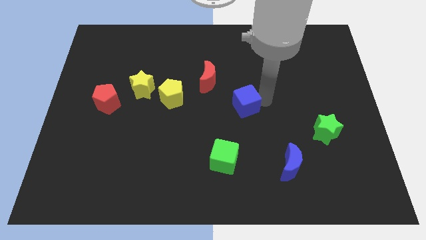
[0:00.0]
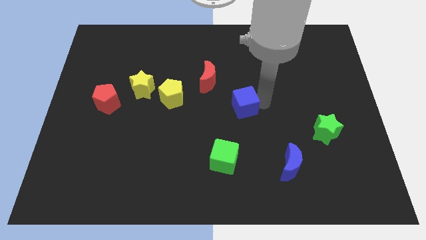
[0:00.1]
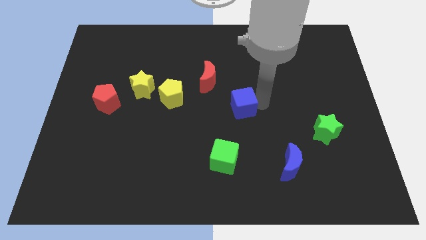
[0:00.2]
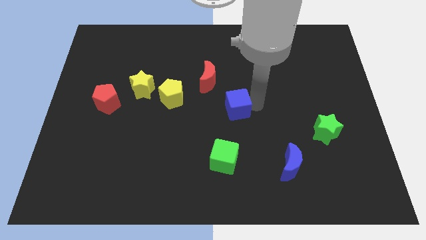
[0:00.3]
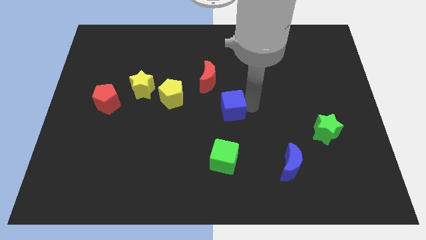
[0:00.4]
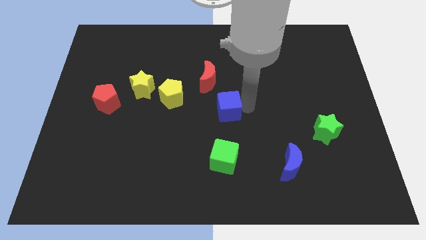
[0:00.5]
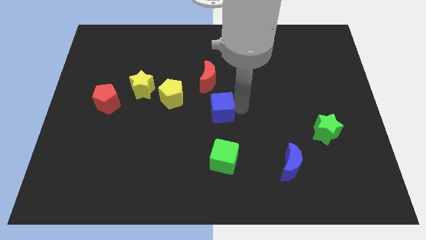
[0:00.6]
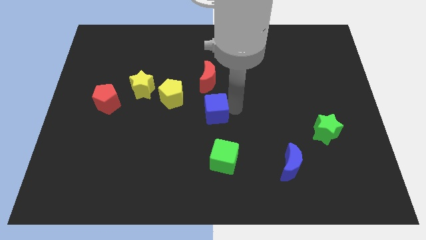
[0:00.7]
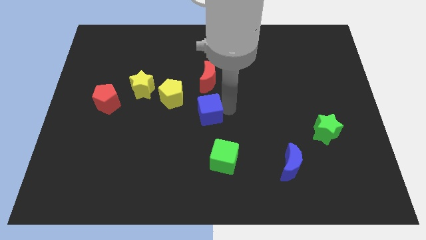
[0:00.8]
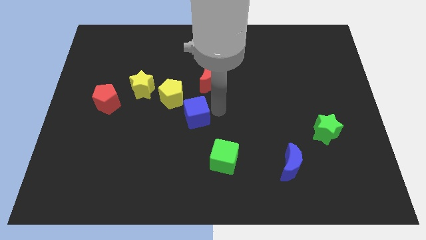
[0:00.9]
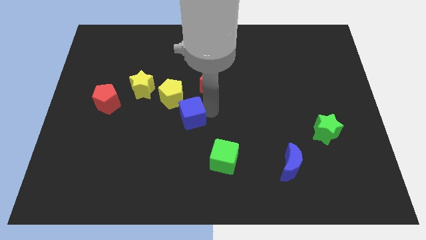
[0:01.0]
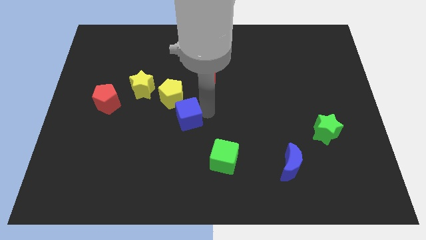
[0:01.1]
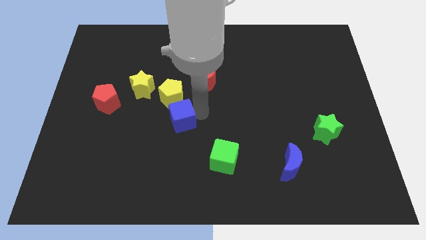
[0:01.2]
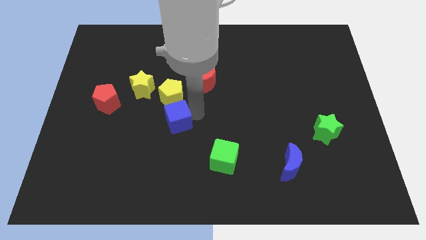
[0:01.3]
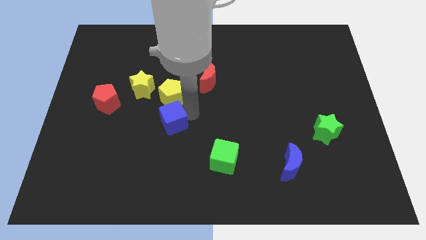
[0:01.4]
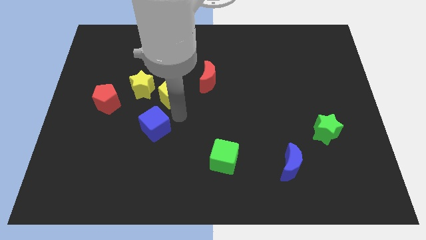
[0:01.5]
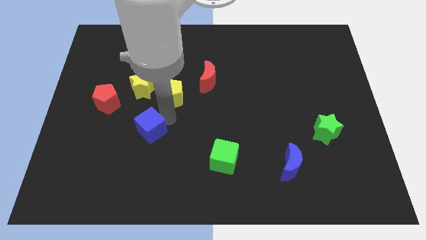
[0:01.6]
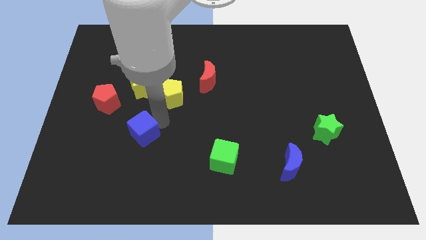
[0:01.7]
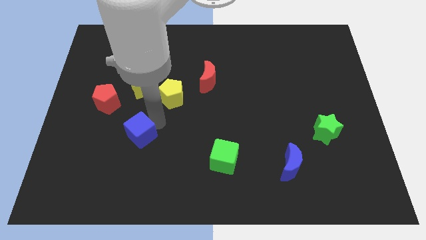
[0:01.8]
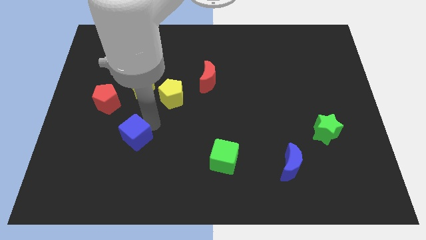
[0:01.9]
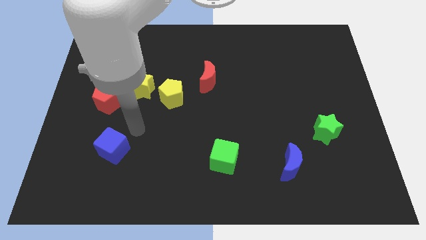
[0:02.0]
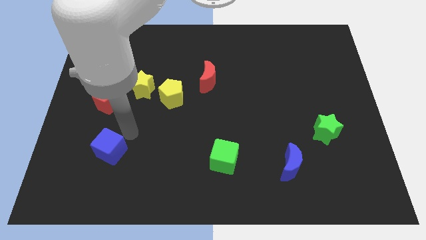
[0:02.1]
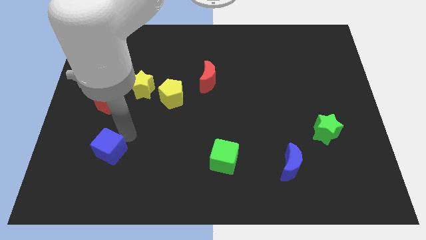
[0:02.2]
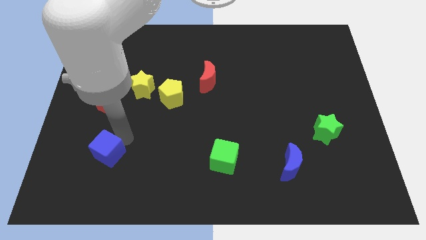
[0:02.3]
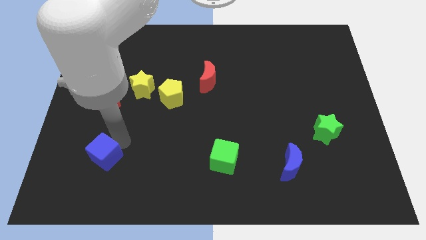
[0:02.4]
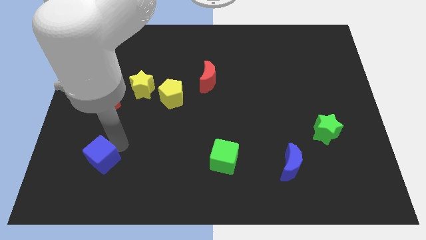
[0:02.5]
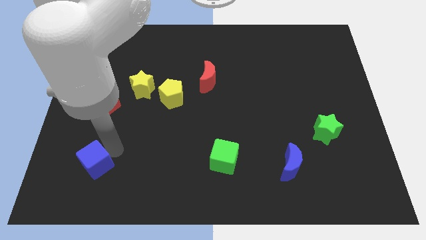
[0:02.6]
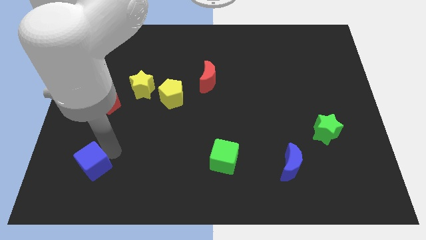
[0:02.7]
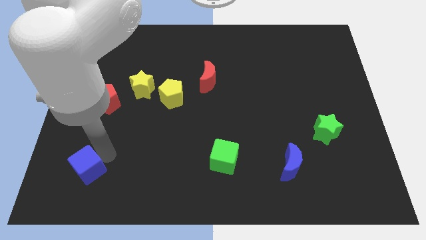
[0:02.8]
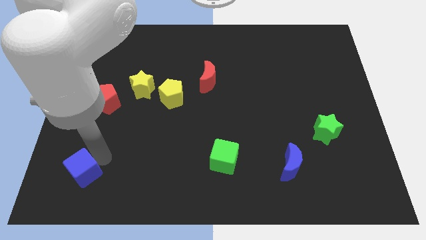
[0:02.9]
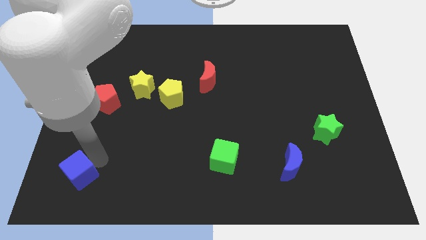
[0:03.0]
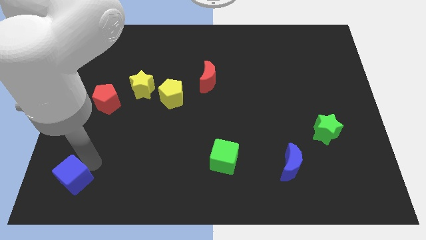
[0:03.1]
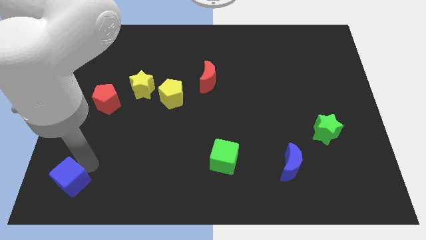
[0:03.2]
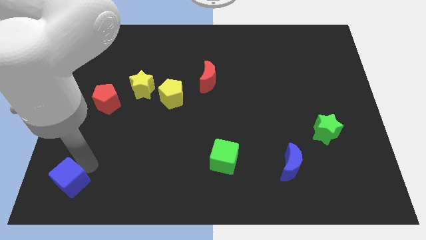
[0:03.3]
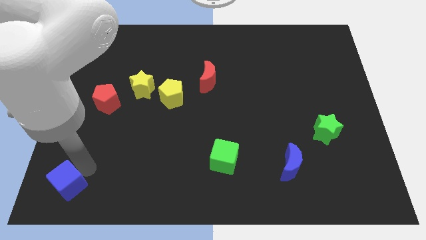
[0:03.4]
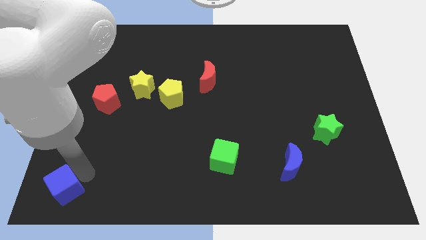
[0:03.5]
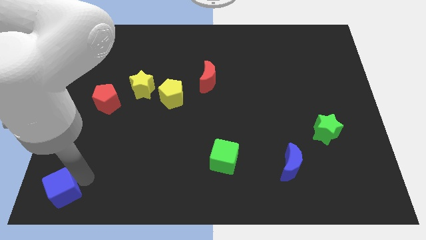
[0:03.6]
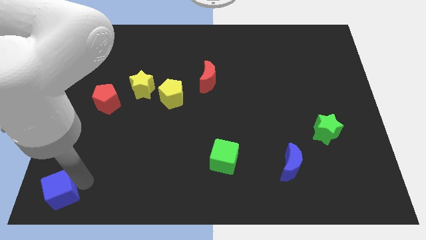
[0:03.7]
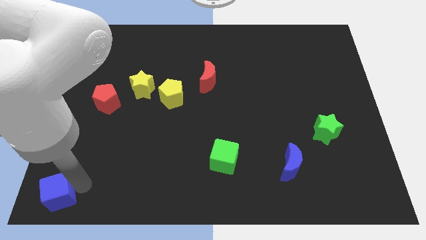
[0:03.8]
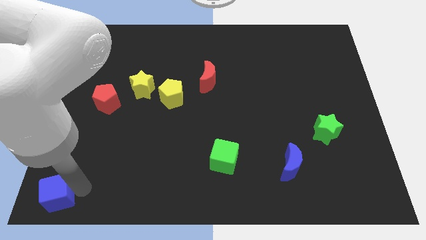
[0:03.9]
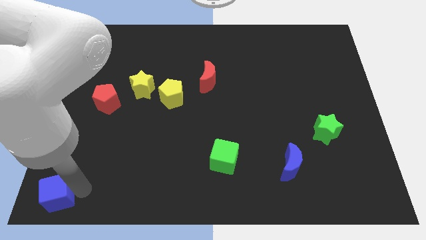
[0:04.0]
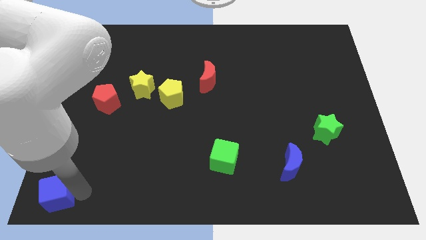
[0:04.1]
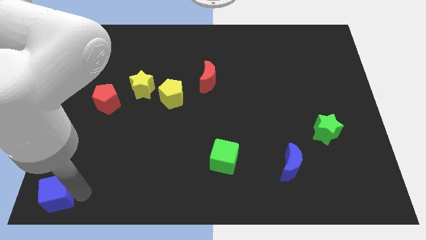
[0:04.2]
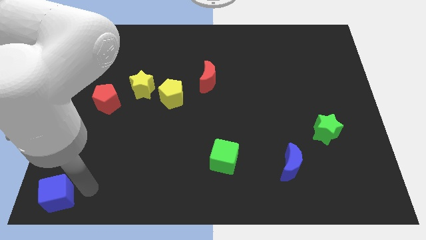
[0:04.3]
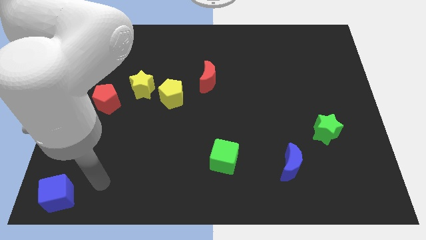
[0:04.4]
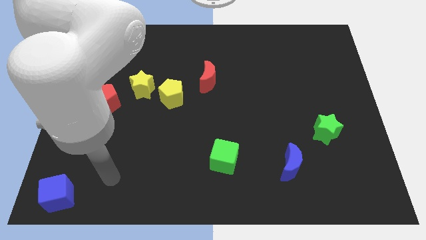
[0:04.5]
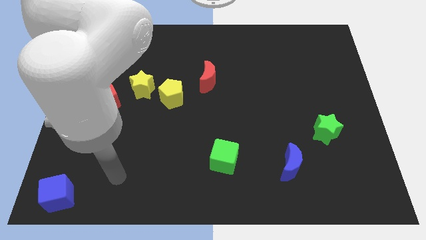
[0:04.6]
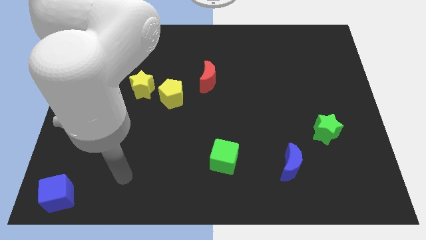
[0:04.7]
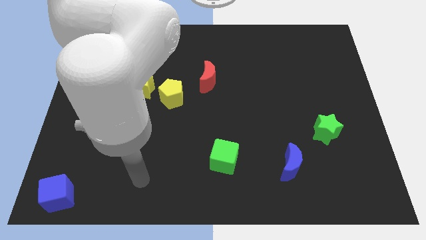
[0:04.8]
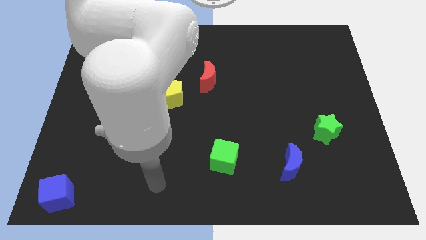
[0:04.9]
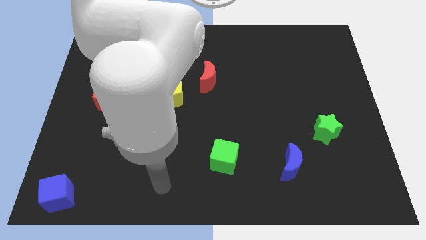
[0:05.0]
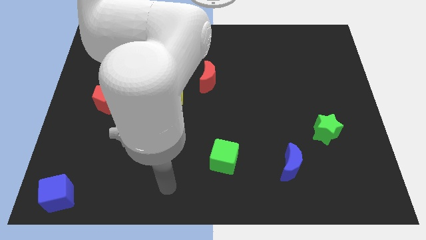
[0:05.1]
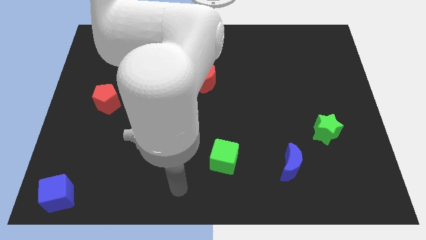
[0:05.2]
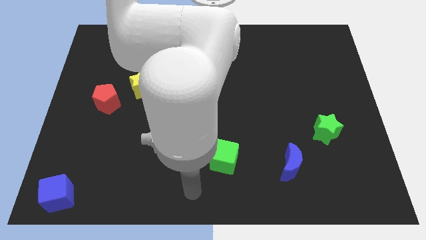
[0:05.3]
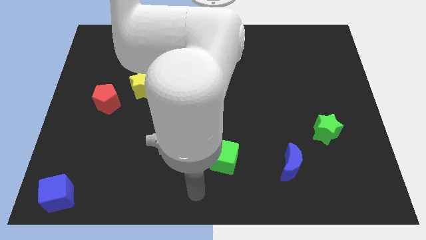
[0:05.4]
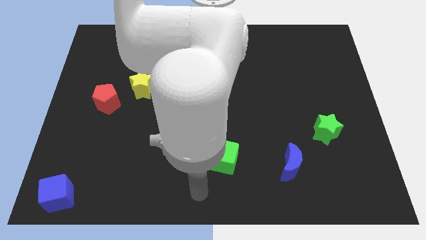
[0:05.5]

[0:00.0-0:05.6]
move the blue cube to the bottom left corner

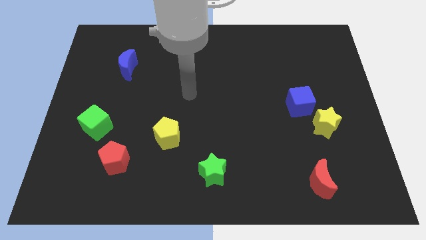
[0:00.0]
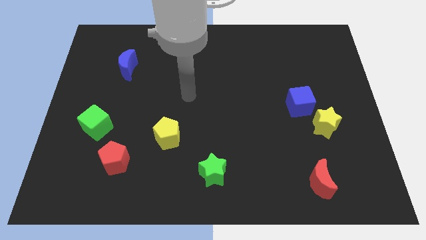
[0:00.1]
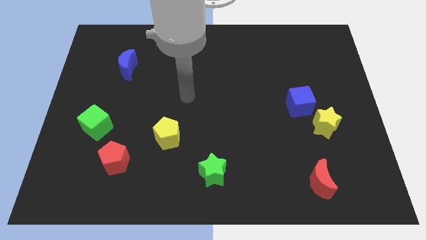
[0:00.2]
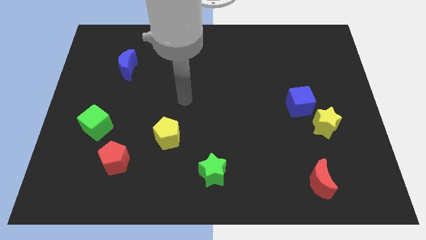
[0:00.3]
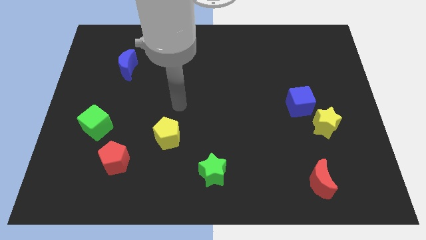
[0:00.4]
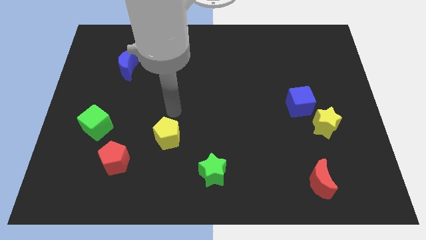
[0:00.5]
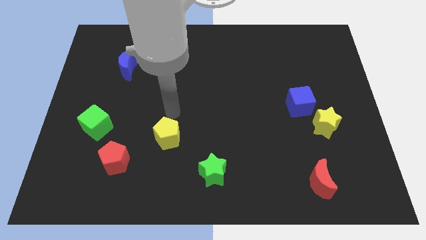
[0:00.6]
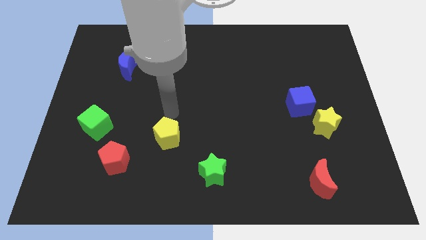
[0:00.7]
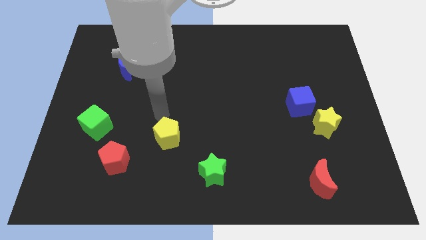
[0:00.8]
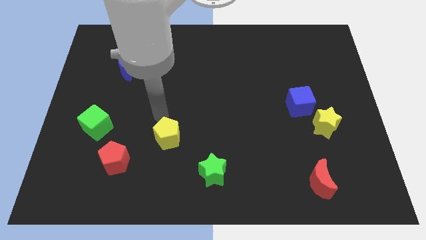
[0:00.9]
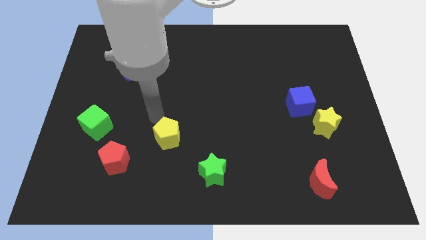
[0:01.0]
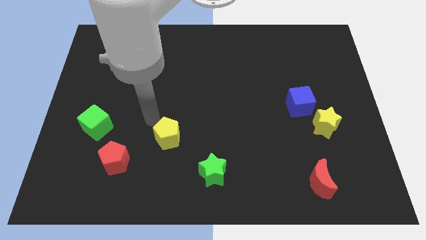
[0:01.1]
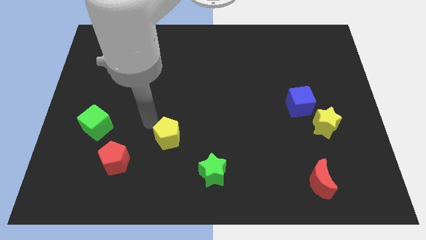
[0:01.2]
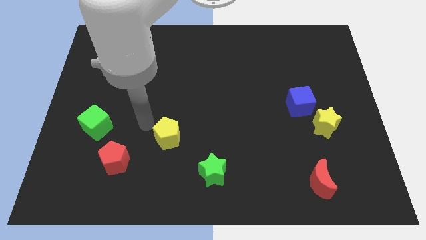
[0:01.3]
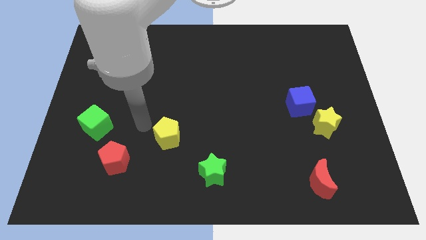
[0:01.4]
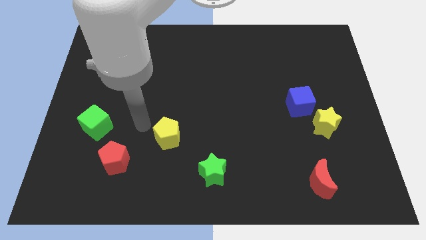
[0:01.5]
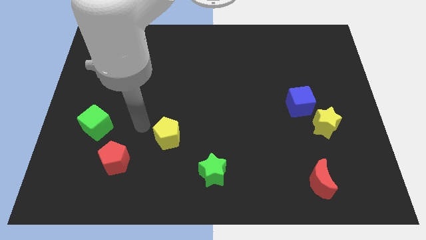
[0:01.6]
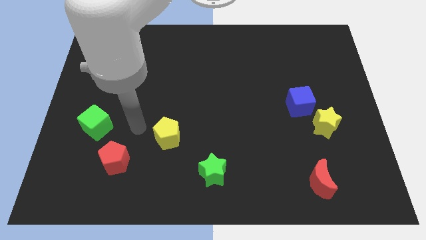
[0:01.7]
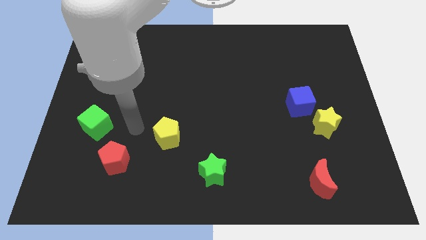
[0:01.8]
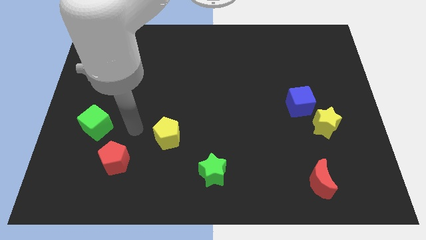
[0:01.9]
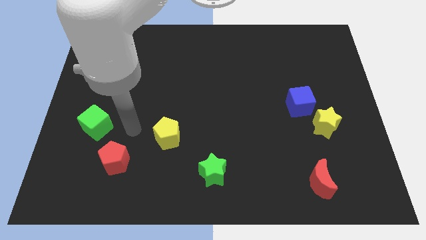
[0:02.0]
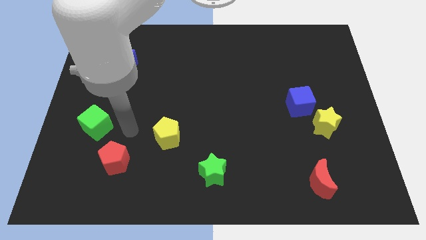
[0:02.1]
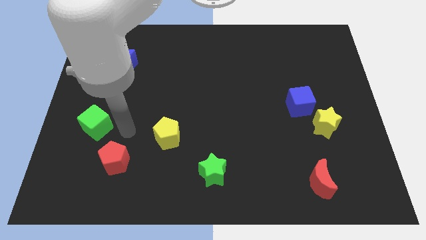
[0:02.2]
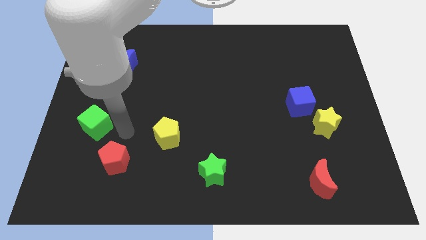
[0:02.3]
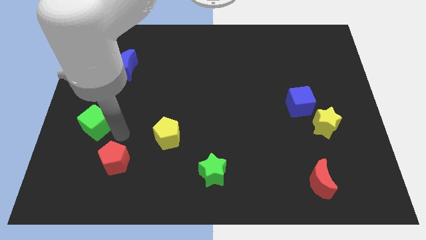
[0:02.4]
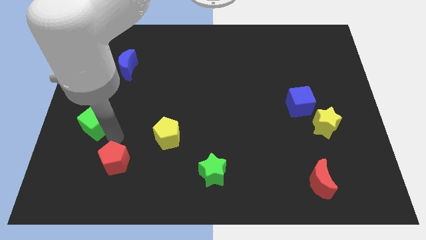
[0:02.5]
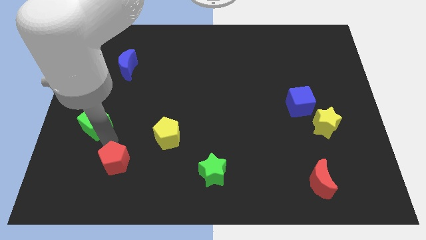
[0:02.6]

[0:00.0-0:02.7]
move your arm in between the green cube and red pentagon

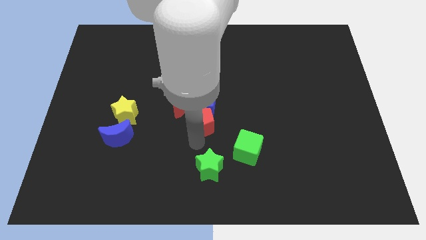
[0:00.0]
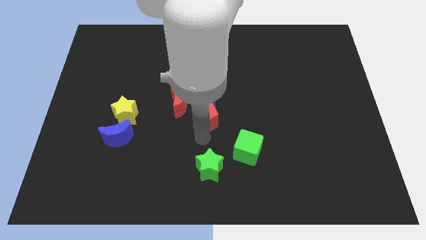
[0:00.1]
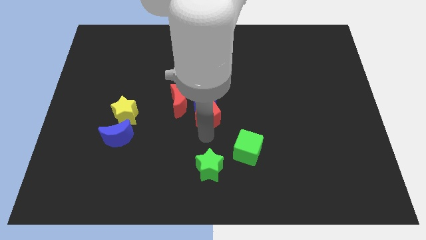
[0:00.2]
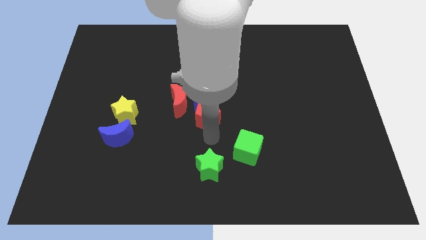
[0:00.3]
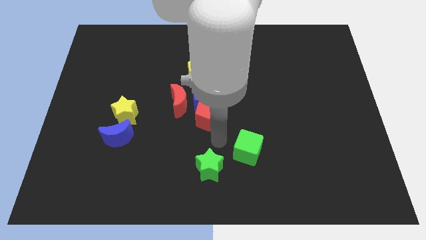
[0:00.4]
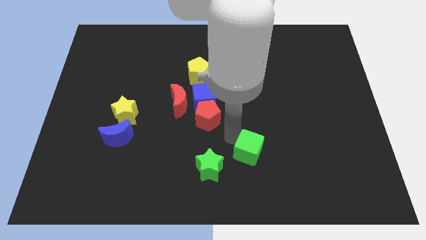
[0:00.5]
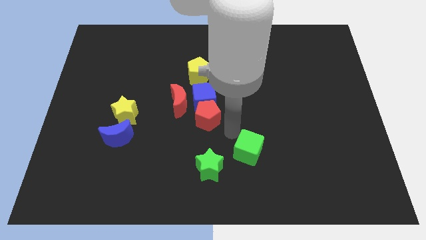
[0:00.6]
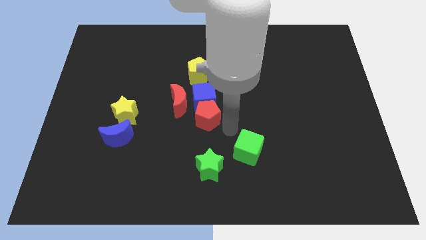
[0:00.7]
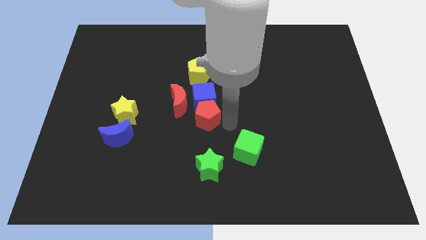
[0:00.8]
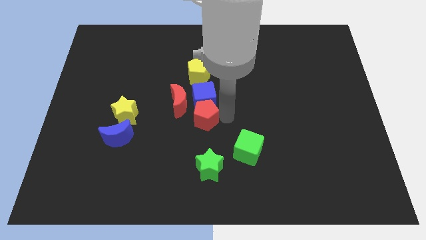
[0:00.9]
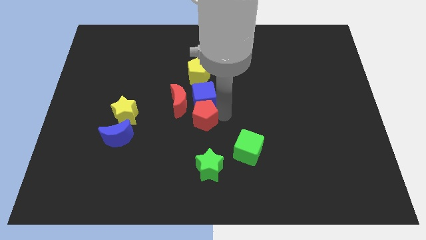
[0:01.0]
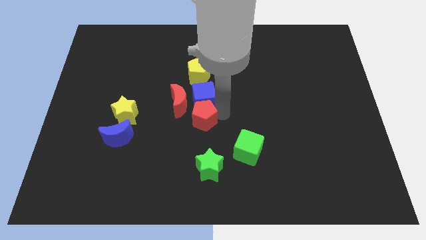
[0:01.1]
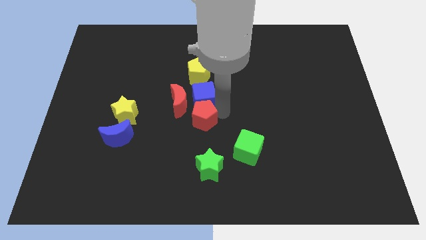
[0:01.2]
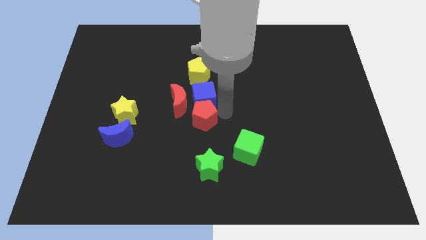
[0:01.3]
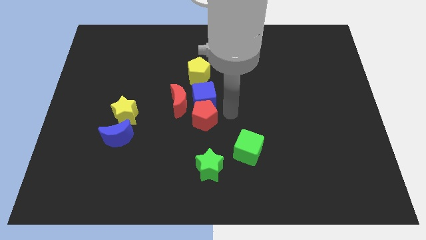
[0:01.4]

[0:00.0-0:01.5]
push red pentagon along with blue cube towards the yellow pentagon
